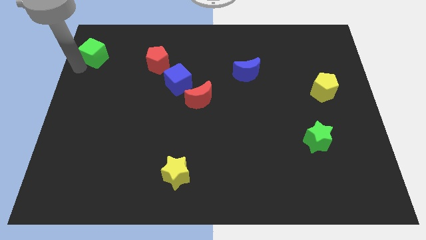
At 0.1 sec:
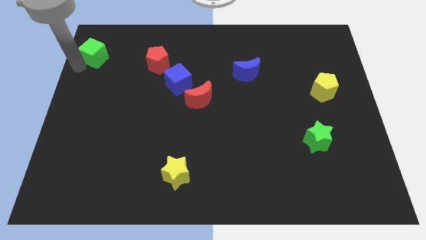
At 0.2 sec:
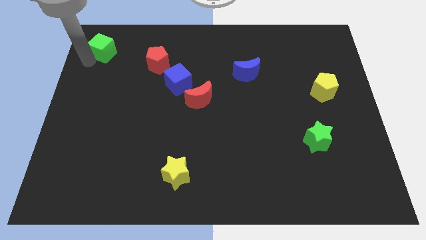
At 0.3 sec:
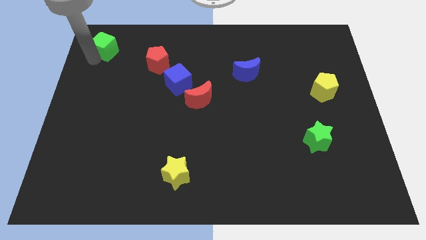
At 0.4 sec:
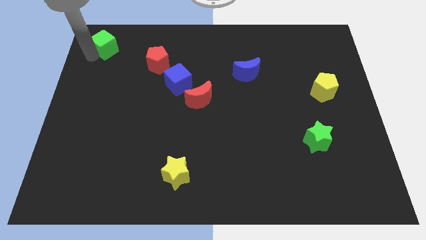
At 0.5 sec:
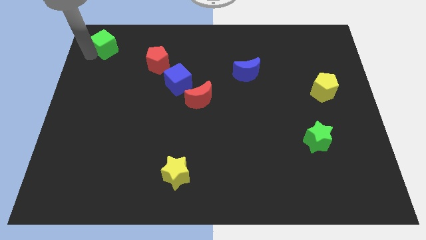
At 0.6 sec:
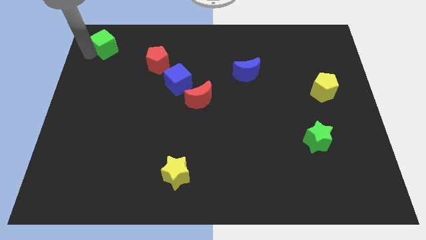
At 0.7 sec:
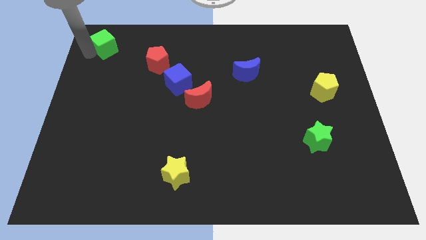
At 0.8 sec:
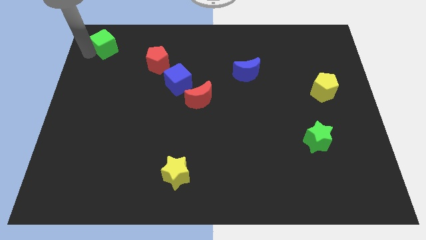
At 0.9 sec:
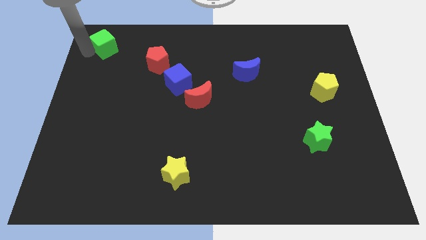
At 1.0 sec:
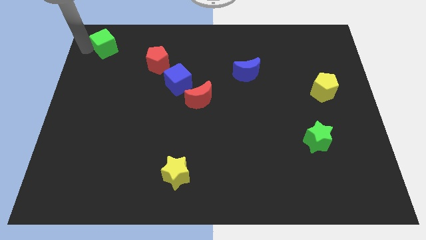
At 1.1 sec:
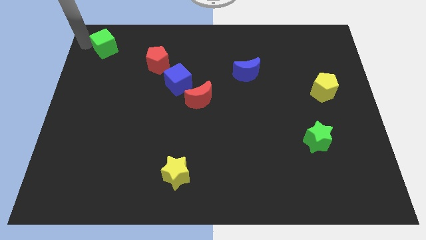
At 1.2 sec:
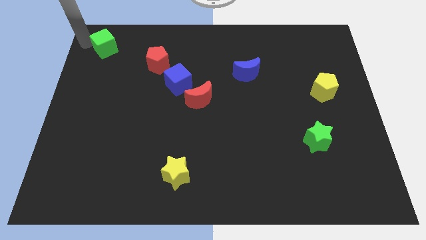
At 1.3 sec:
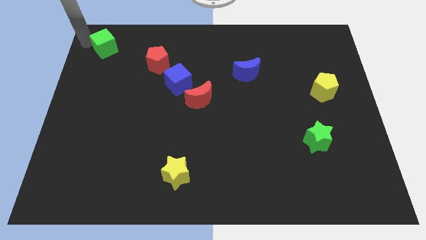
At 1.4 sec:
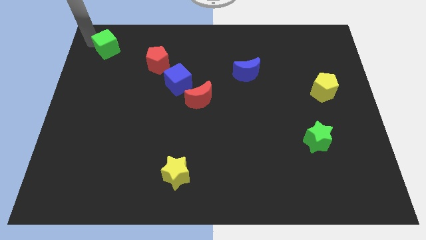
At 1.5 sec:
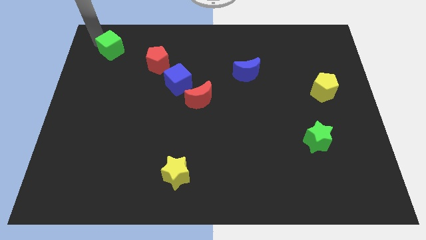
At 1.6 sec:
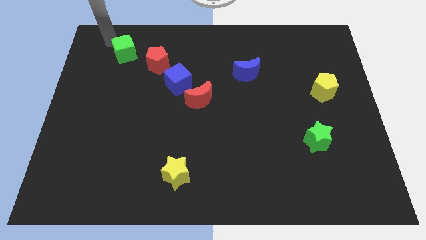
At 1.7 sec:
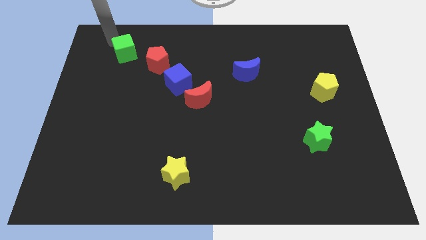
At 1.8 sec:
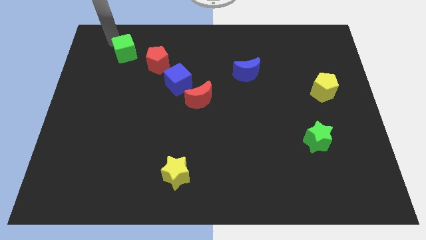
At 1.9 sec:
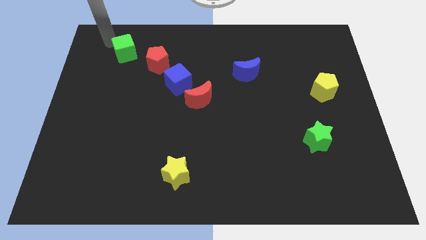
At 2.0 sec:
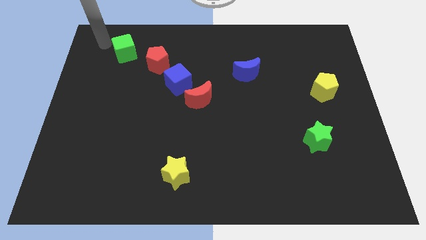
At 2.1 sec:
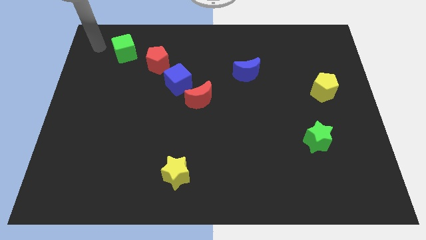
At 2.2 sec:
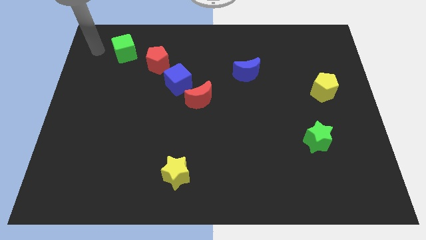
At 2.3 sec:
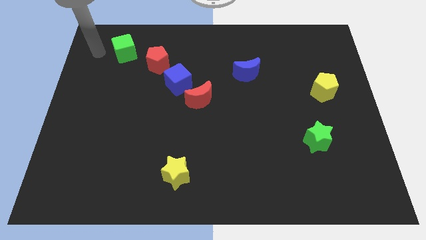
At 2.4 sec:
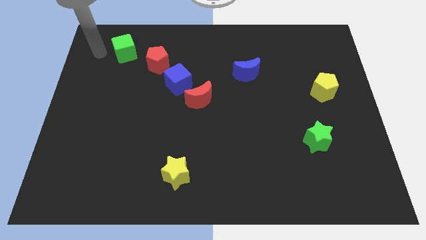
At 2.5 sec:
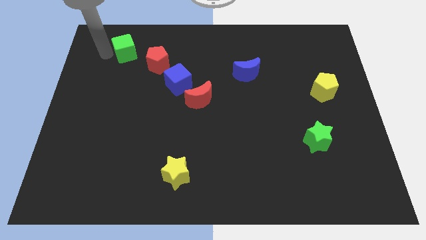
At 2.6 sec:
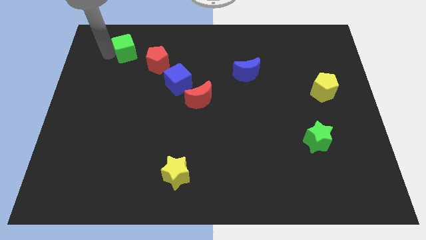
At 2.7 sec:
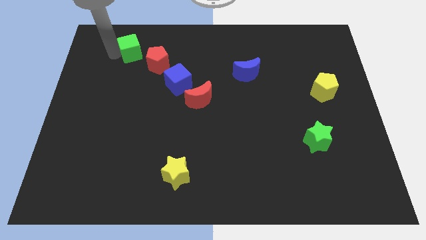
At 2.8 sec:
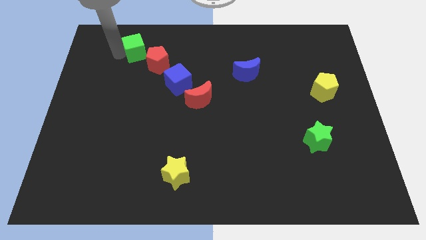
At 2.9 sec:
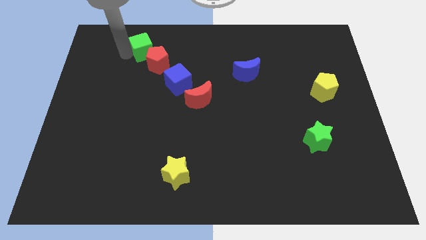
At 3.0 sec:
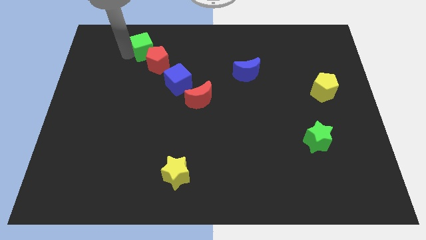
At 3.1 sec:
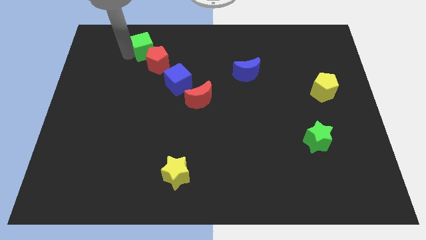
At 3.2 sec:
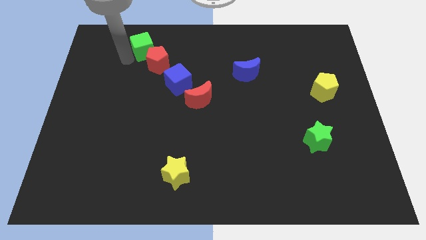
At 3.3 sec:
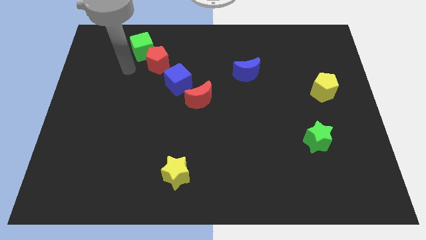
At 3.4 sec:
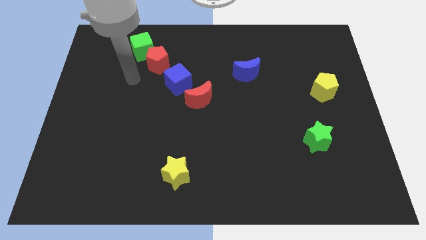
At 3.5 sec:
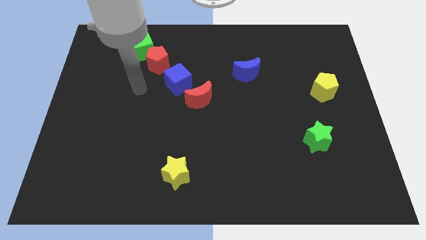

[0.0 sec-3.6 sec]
place the green cube to the top left side of the red pentagon

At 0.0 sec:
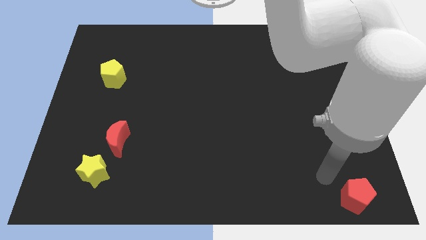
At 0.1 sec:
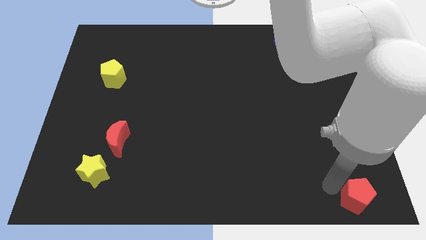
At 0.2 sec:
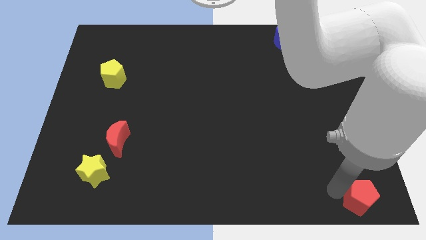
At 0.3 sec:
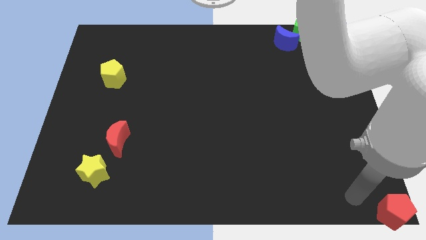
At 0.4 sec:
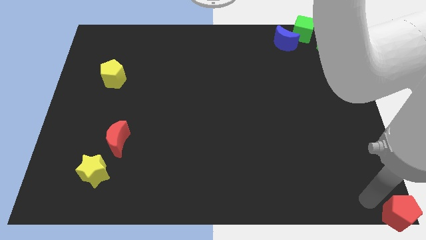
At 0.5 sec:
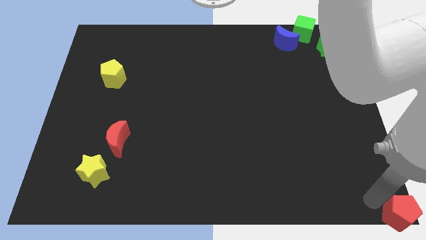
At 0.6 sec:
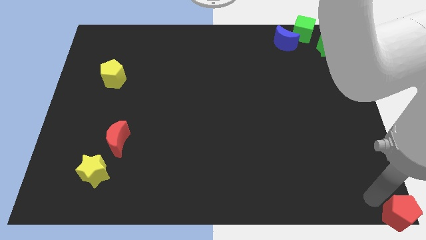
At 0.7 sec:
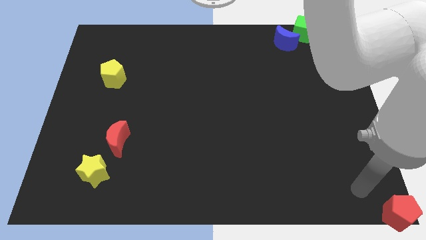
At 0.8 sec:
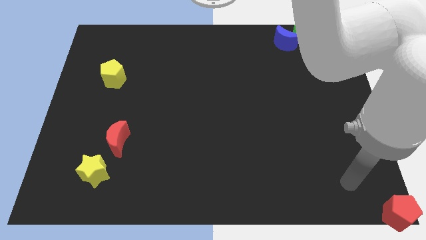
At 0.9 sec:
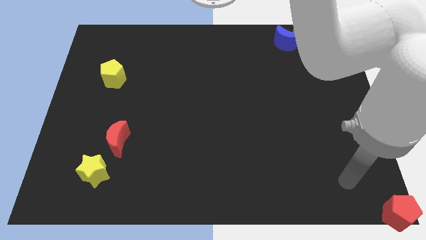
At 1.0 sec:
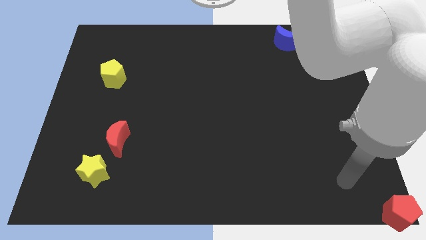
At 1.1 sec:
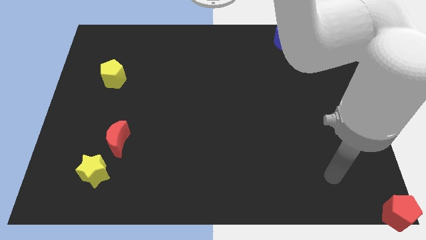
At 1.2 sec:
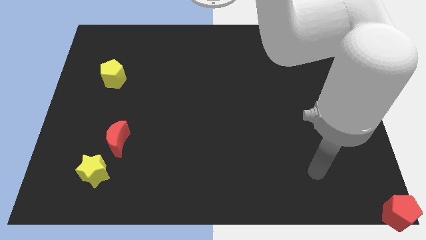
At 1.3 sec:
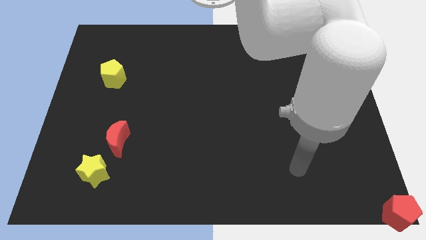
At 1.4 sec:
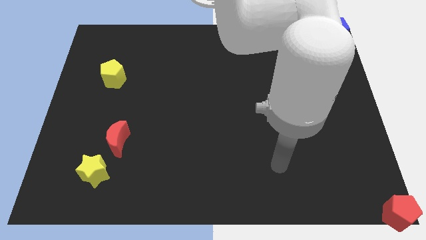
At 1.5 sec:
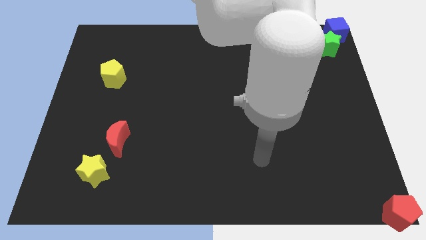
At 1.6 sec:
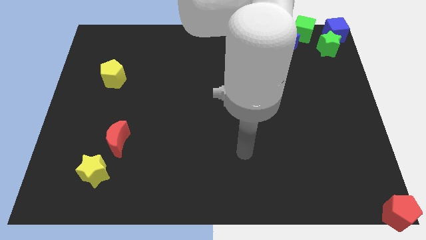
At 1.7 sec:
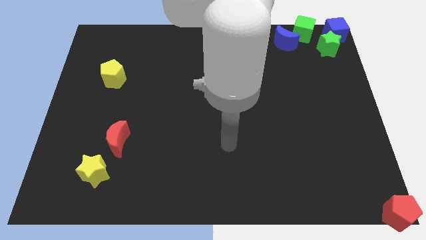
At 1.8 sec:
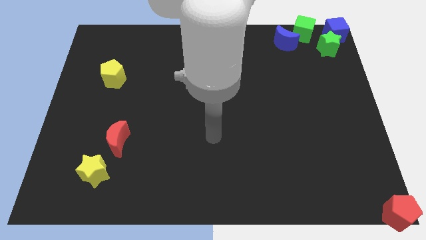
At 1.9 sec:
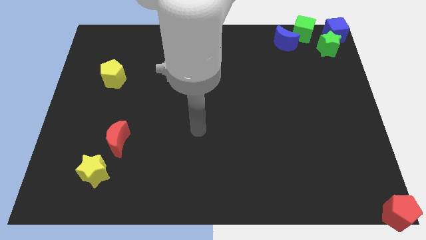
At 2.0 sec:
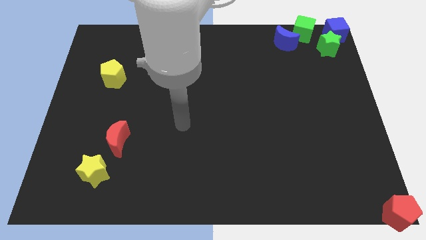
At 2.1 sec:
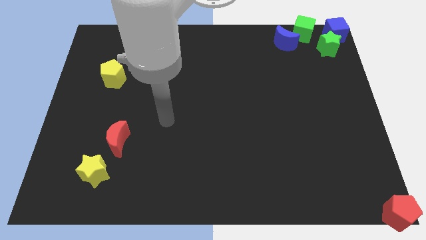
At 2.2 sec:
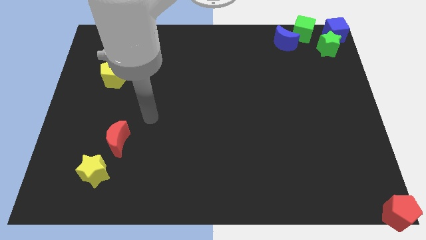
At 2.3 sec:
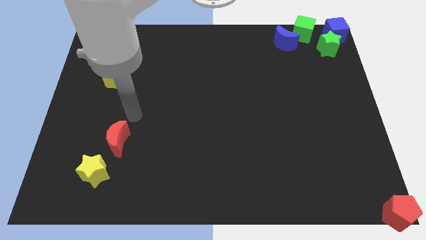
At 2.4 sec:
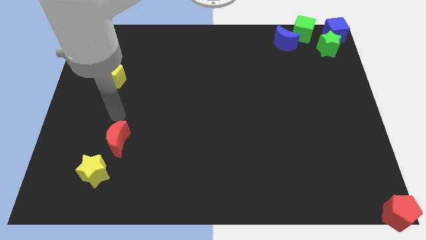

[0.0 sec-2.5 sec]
slightly push the red pentagon to the bottom right corner

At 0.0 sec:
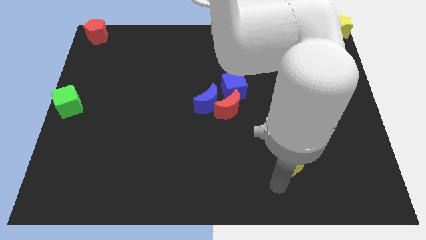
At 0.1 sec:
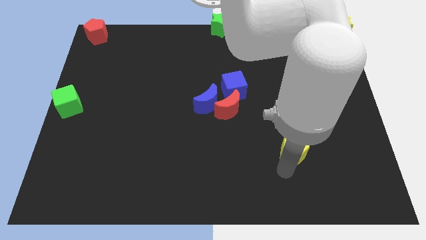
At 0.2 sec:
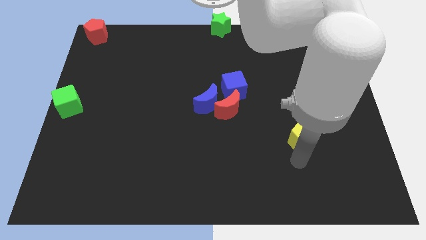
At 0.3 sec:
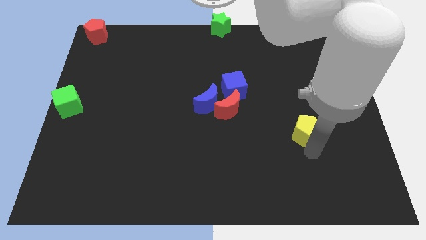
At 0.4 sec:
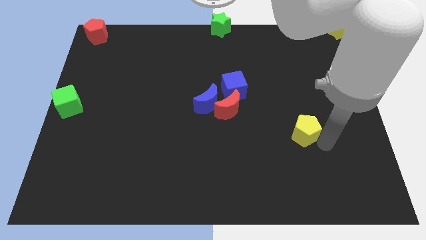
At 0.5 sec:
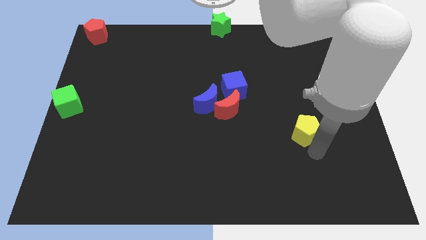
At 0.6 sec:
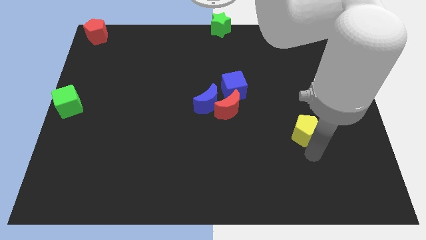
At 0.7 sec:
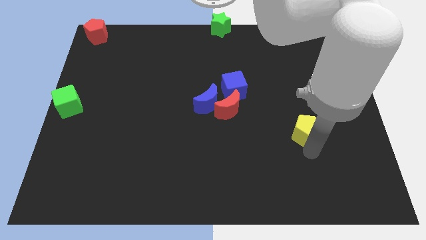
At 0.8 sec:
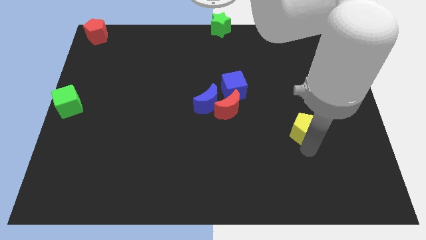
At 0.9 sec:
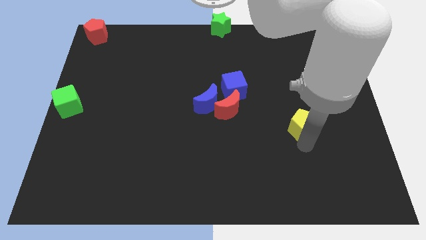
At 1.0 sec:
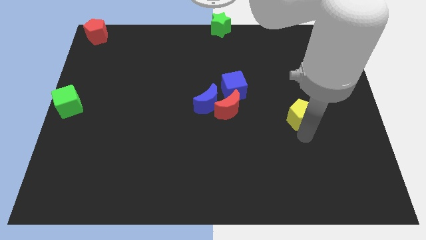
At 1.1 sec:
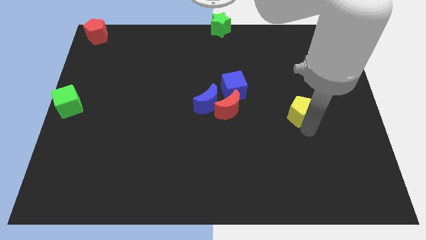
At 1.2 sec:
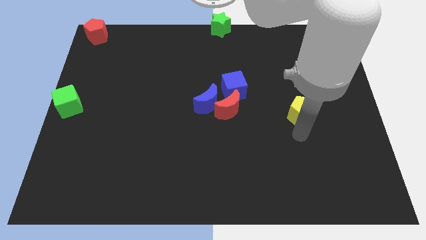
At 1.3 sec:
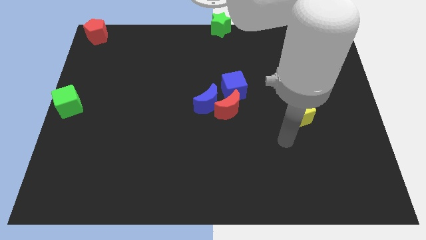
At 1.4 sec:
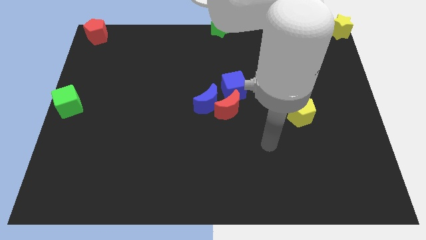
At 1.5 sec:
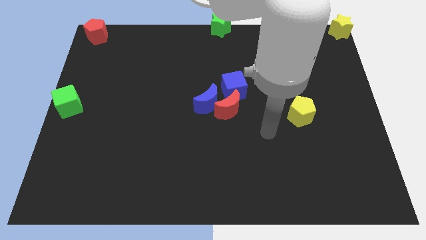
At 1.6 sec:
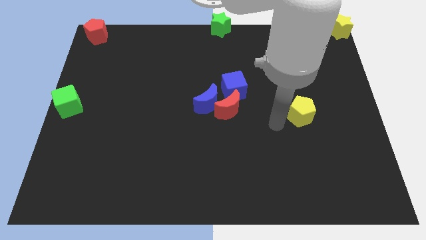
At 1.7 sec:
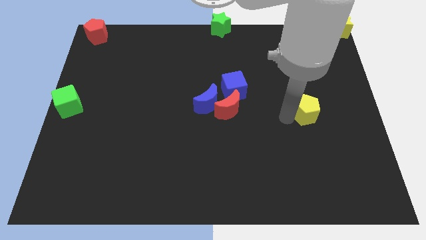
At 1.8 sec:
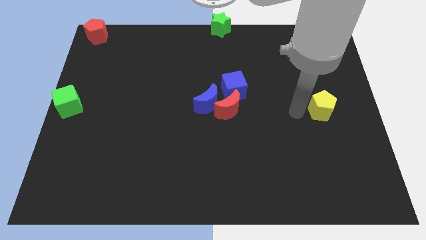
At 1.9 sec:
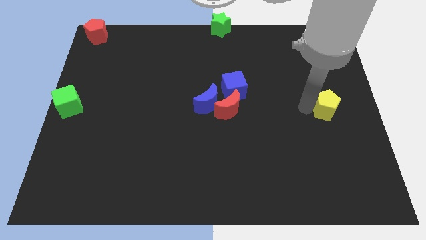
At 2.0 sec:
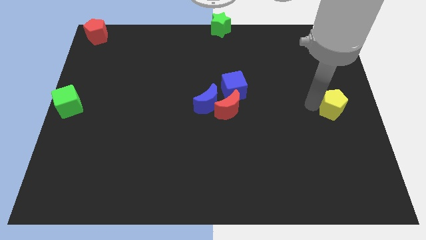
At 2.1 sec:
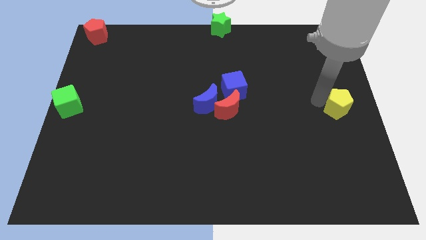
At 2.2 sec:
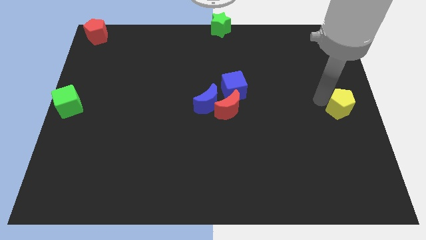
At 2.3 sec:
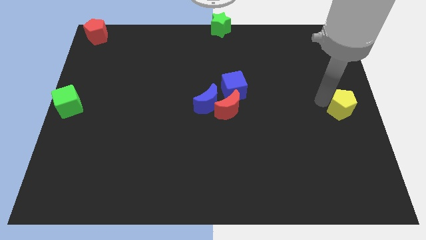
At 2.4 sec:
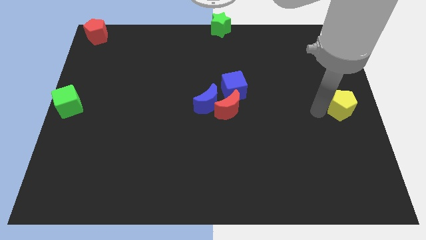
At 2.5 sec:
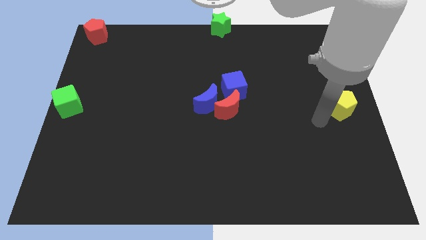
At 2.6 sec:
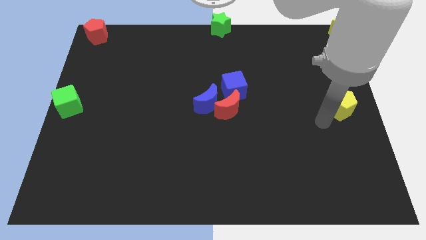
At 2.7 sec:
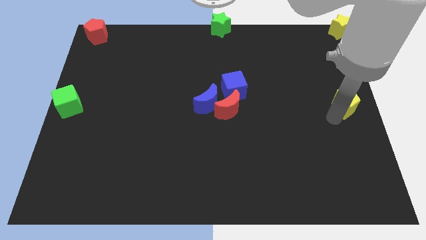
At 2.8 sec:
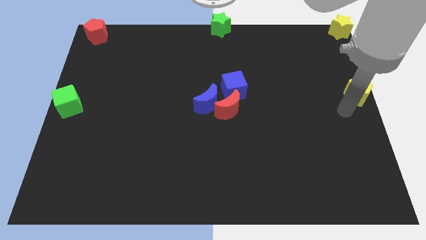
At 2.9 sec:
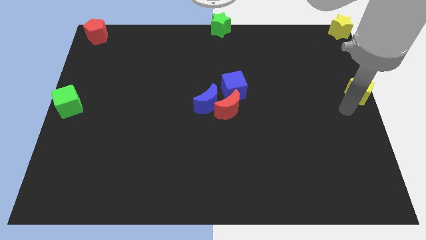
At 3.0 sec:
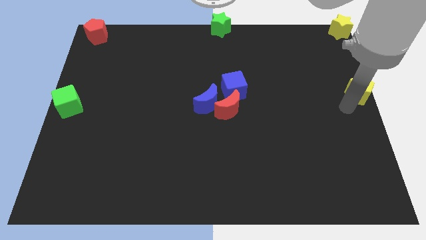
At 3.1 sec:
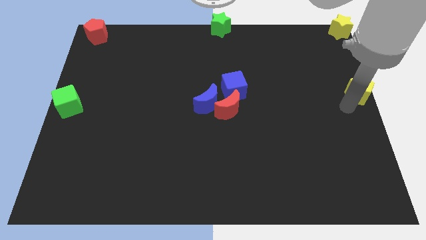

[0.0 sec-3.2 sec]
push the yellow pentagon to right center of the board
